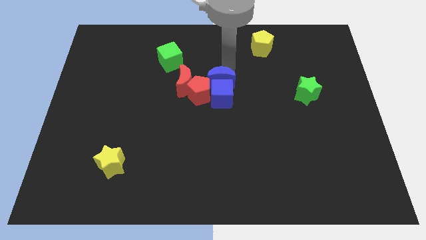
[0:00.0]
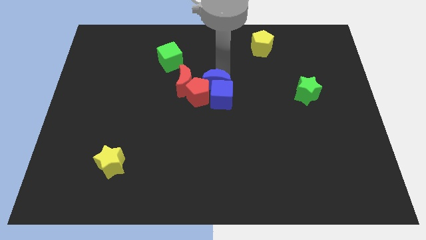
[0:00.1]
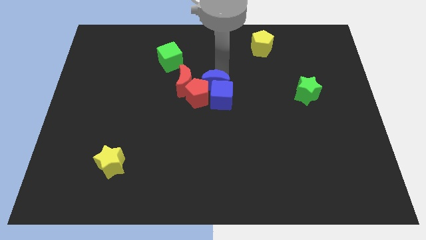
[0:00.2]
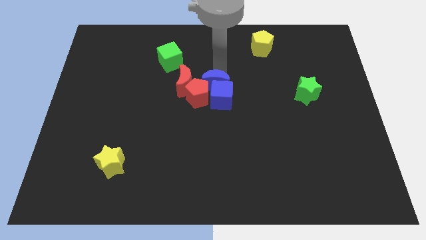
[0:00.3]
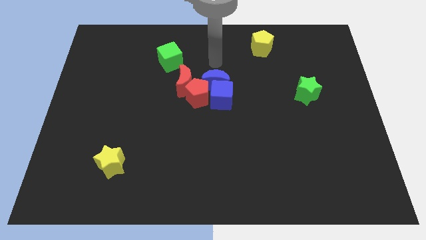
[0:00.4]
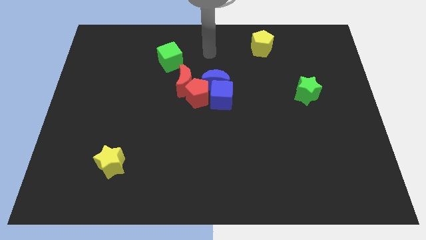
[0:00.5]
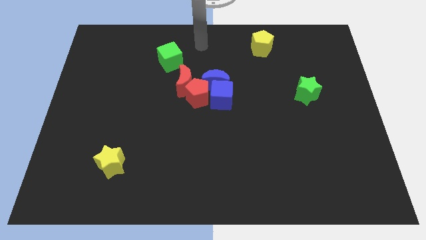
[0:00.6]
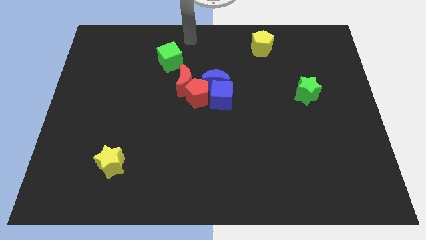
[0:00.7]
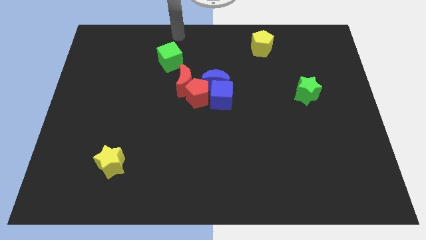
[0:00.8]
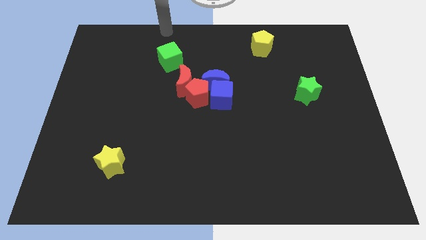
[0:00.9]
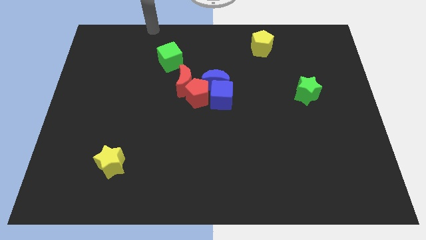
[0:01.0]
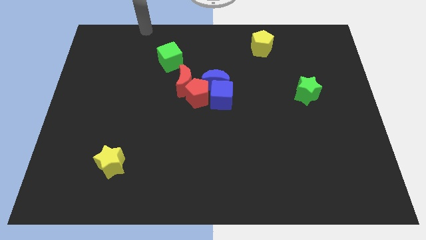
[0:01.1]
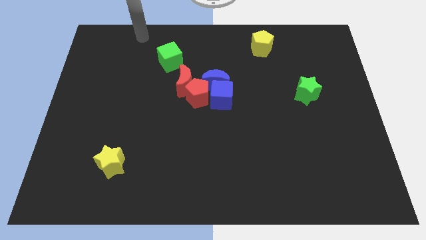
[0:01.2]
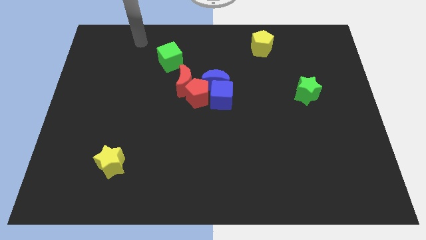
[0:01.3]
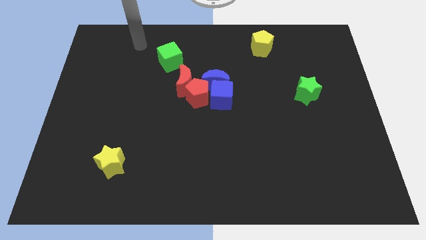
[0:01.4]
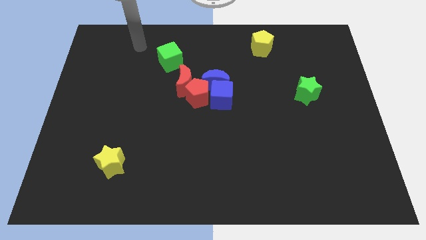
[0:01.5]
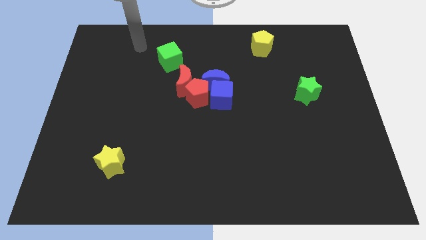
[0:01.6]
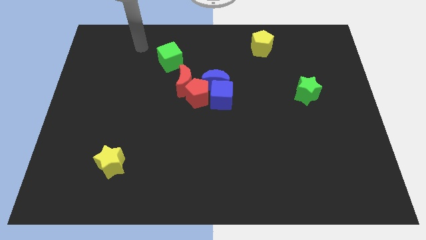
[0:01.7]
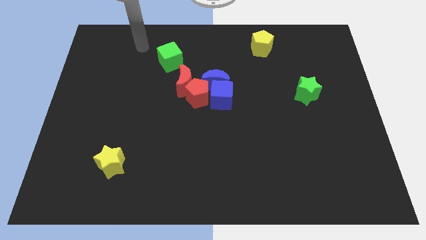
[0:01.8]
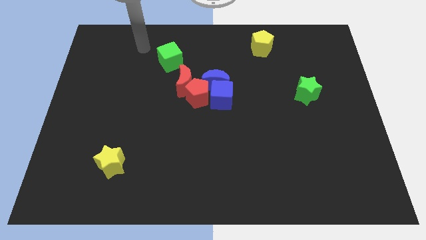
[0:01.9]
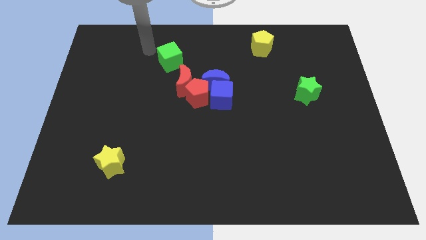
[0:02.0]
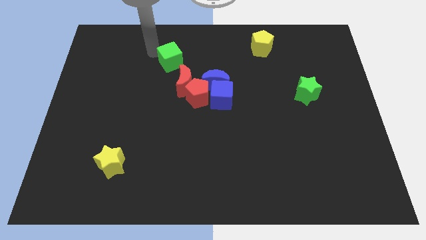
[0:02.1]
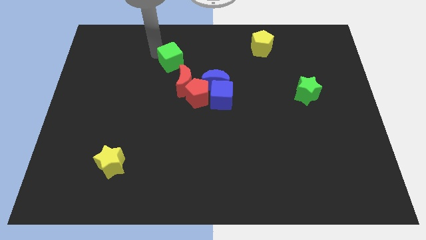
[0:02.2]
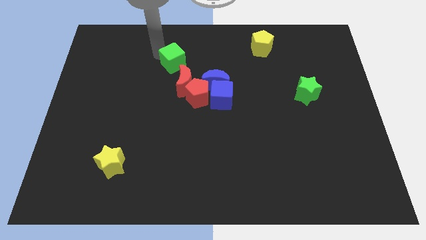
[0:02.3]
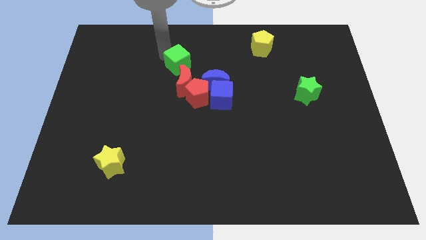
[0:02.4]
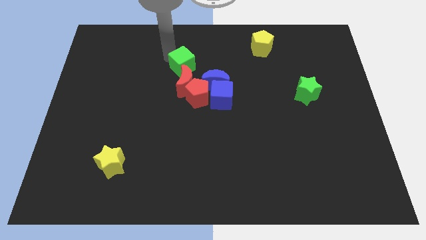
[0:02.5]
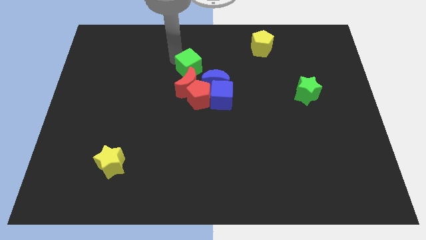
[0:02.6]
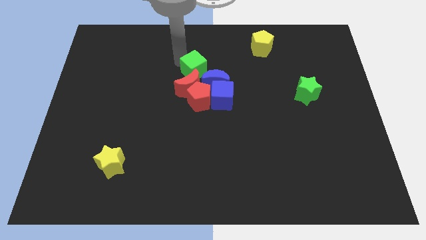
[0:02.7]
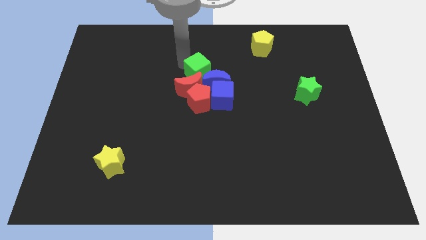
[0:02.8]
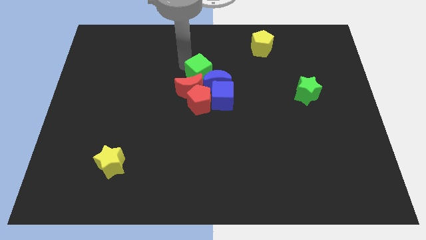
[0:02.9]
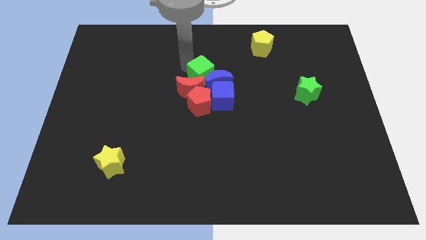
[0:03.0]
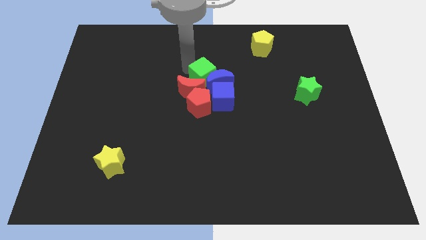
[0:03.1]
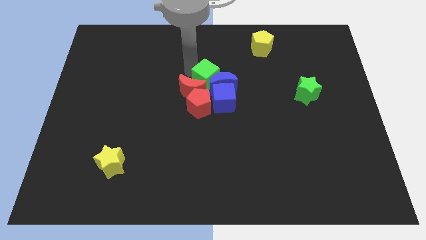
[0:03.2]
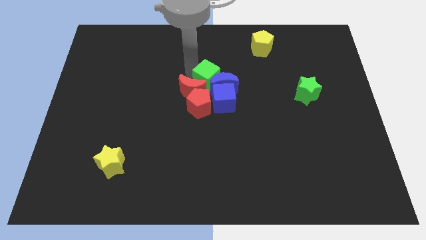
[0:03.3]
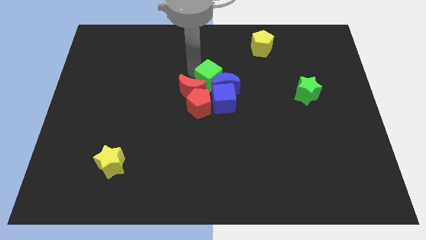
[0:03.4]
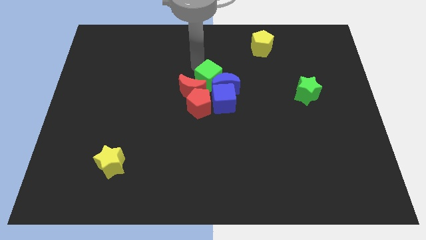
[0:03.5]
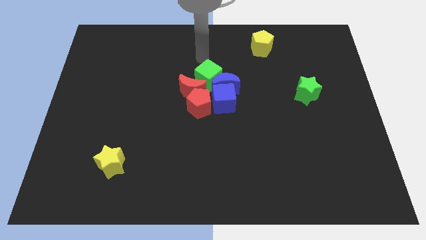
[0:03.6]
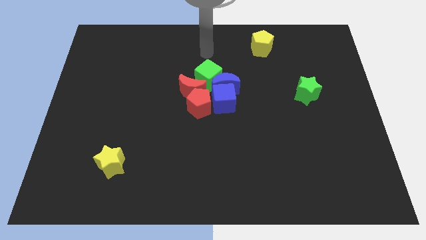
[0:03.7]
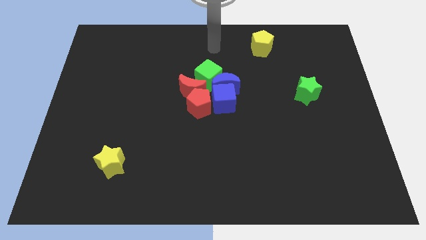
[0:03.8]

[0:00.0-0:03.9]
move the green cube into the blue moon

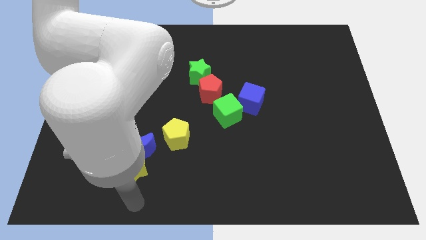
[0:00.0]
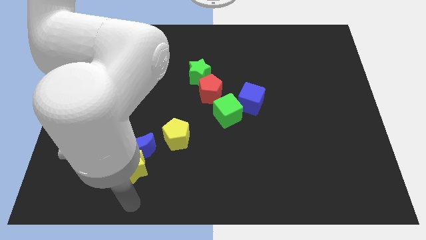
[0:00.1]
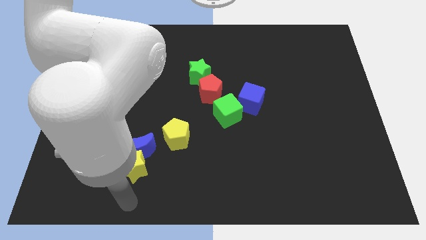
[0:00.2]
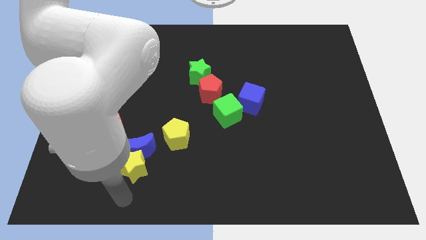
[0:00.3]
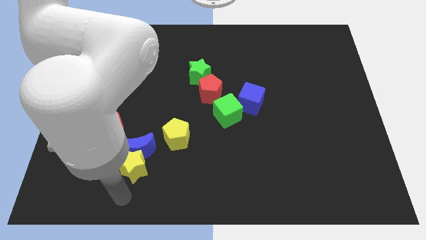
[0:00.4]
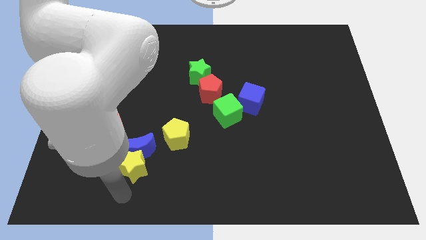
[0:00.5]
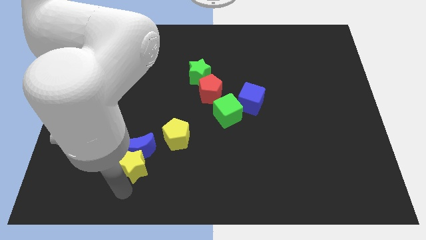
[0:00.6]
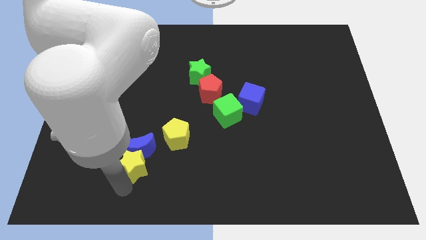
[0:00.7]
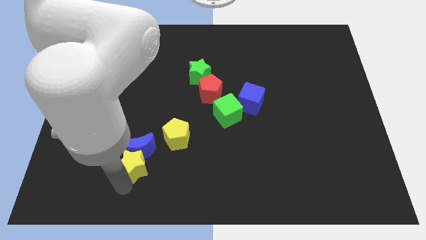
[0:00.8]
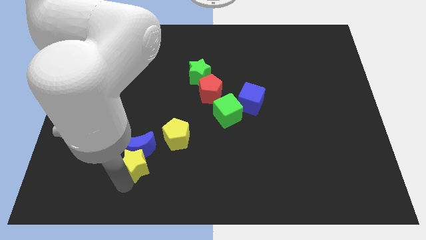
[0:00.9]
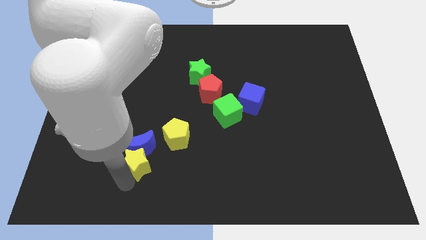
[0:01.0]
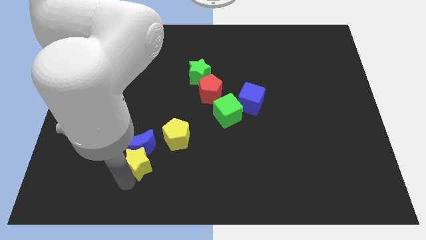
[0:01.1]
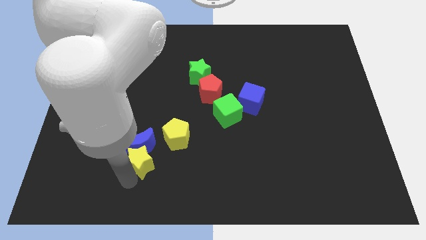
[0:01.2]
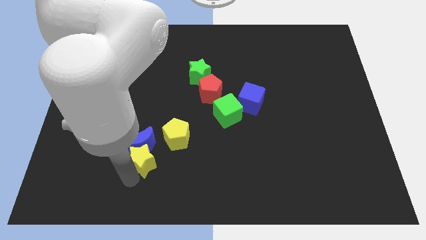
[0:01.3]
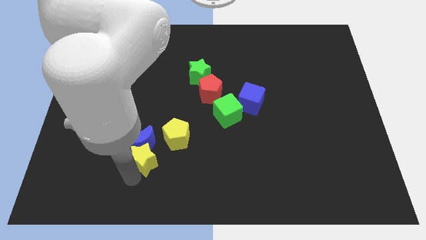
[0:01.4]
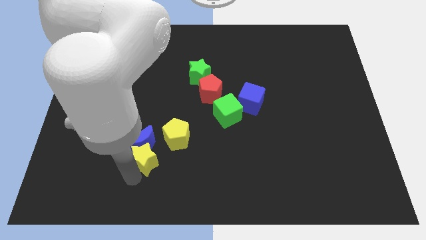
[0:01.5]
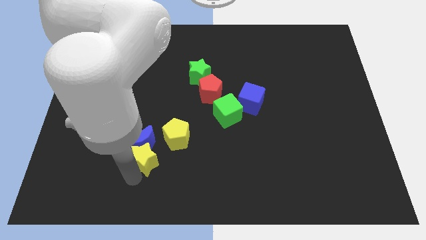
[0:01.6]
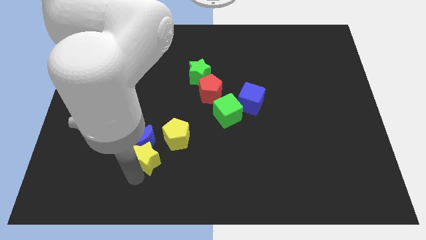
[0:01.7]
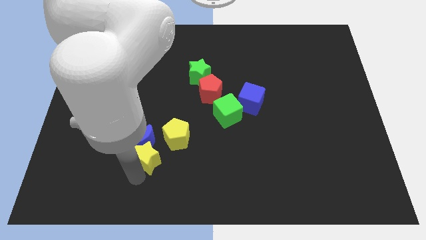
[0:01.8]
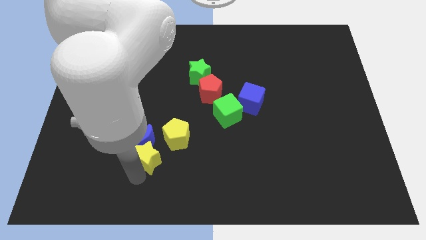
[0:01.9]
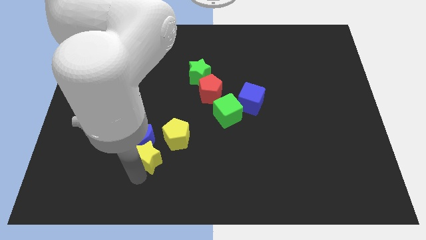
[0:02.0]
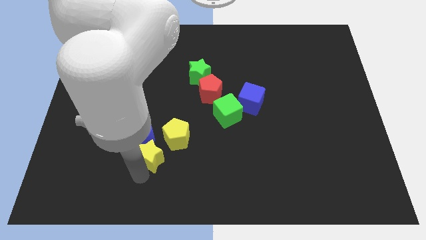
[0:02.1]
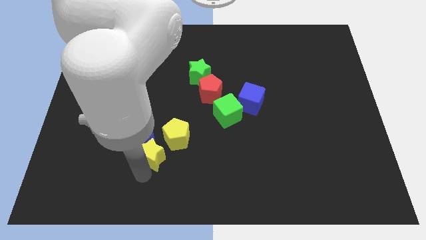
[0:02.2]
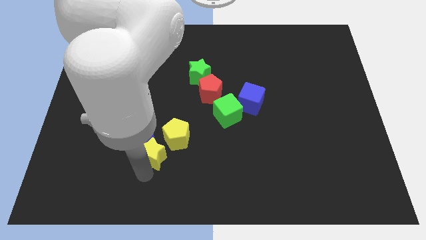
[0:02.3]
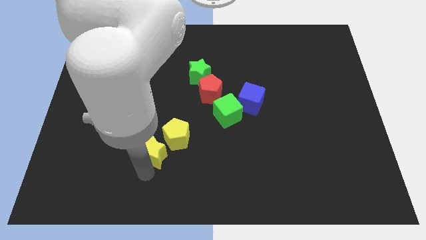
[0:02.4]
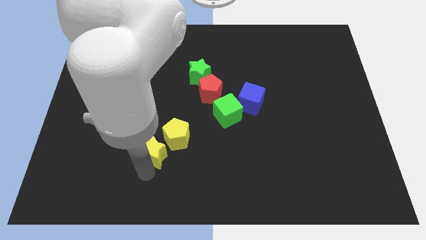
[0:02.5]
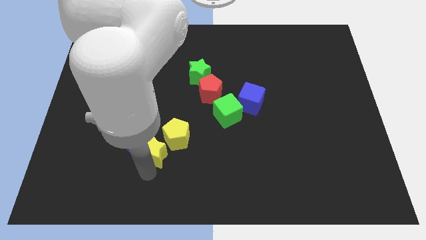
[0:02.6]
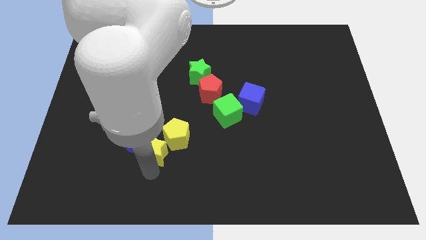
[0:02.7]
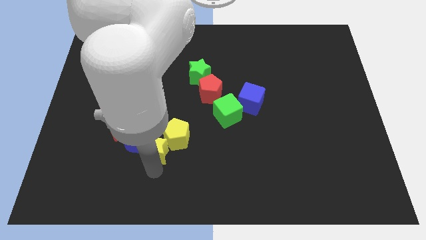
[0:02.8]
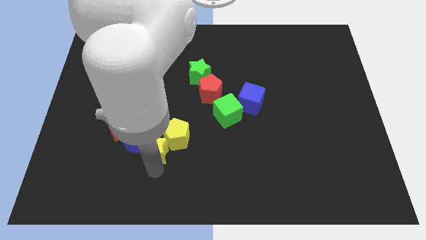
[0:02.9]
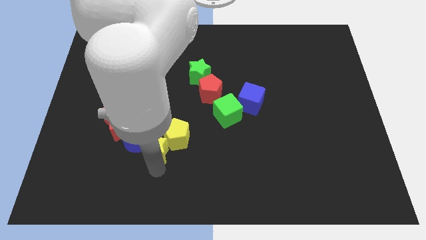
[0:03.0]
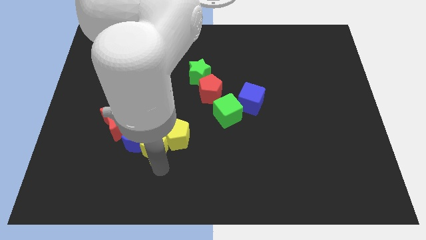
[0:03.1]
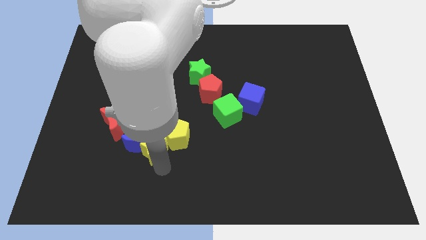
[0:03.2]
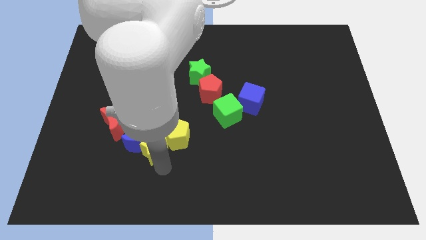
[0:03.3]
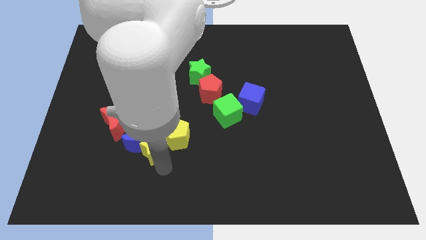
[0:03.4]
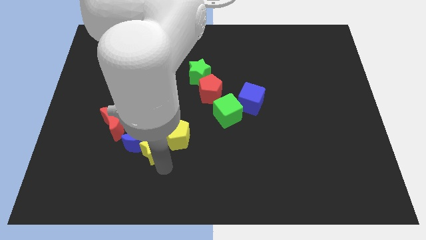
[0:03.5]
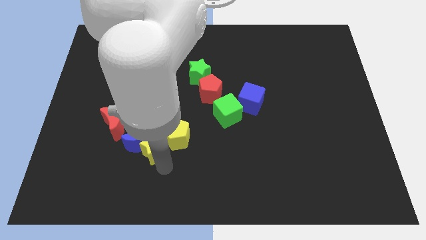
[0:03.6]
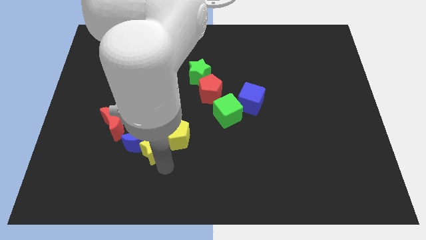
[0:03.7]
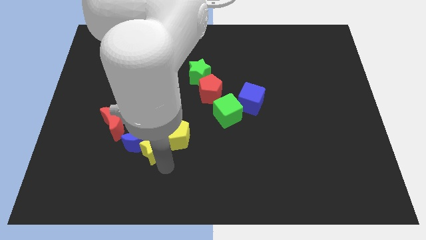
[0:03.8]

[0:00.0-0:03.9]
push the yellow star close to the yellow pentagon

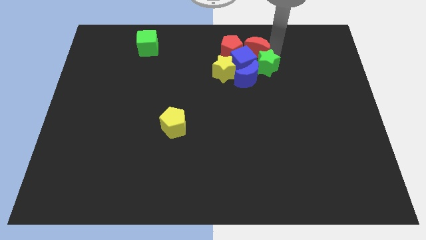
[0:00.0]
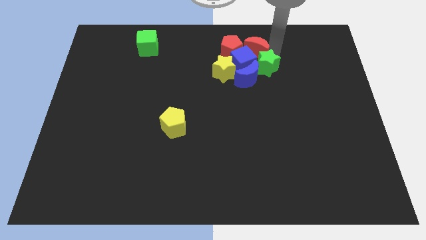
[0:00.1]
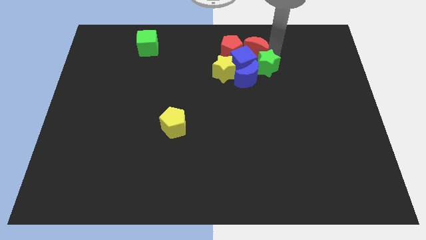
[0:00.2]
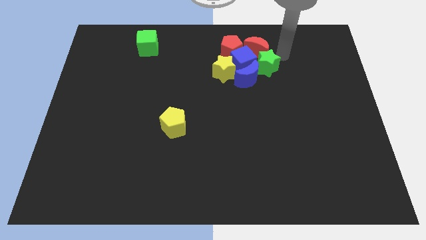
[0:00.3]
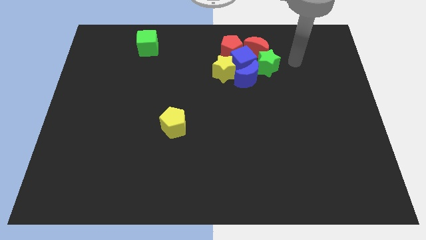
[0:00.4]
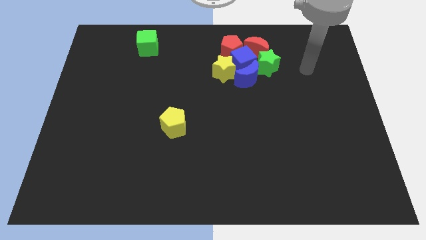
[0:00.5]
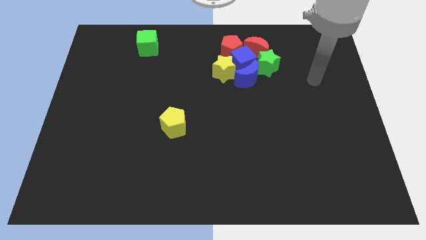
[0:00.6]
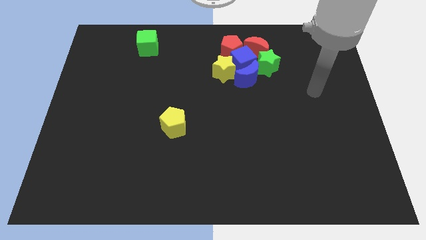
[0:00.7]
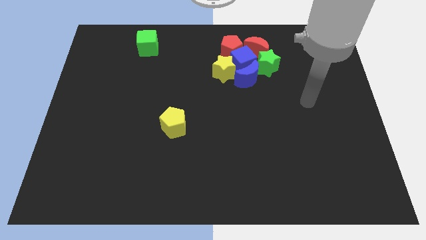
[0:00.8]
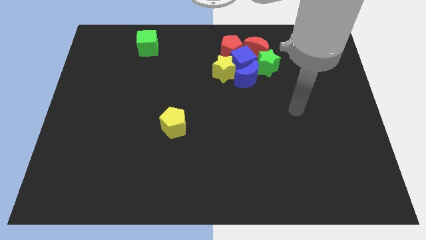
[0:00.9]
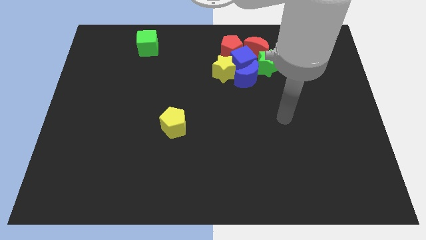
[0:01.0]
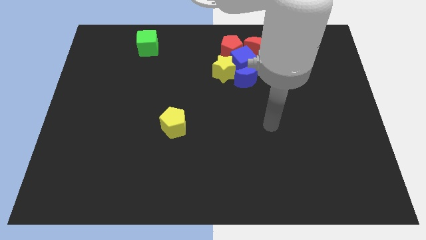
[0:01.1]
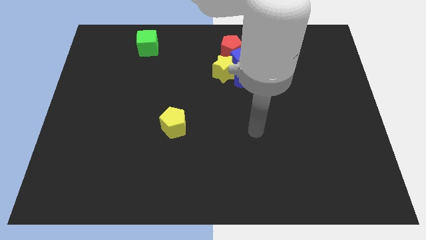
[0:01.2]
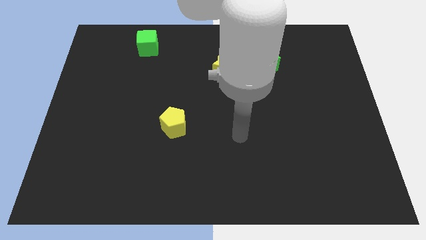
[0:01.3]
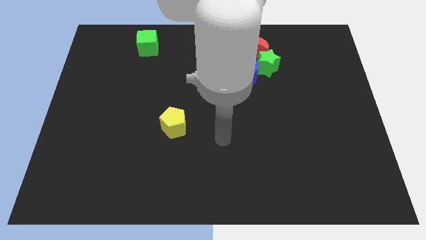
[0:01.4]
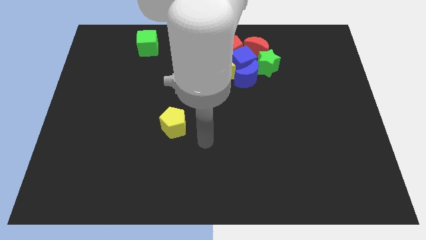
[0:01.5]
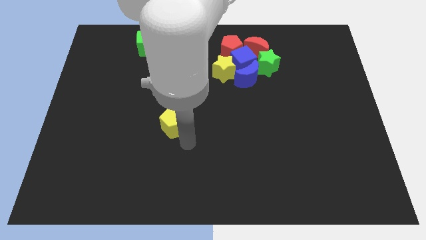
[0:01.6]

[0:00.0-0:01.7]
move your arm towards the yellow pentagon
